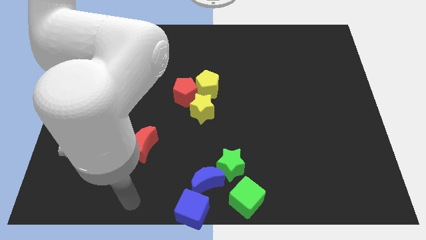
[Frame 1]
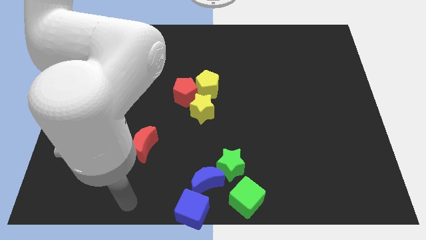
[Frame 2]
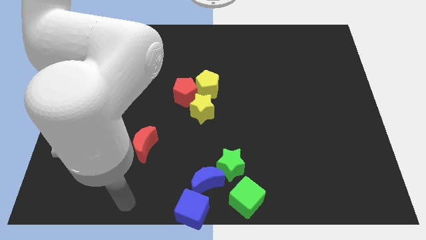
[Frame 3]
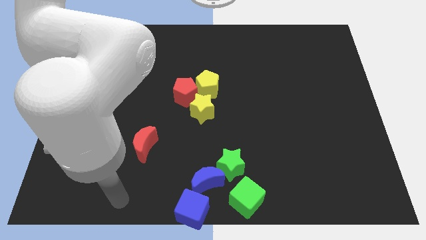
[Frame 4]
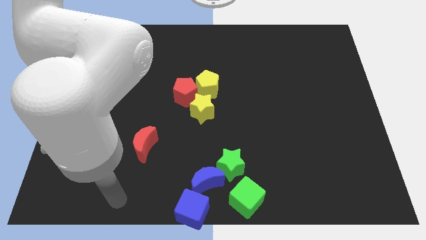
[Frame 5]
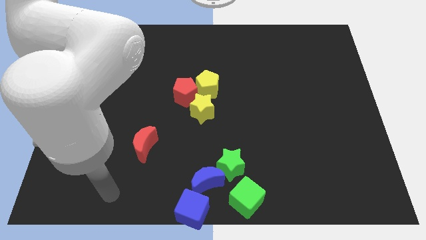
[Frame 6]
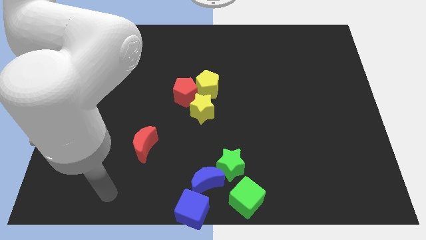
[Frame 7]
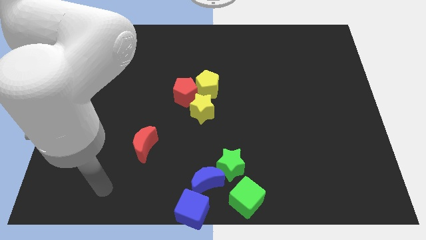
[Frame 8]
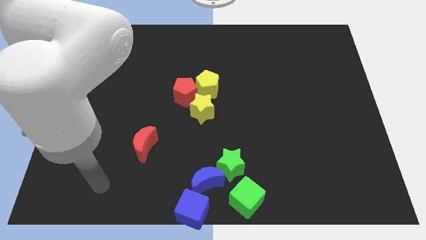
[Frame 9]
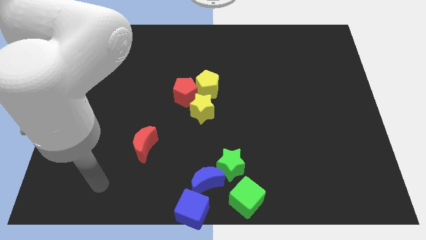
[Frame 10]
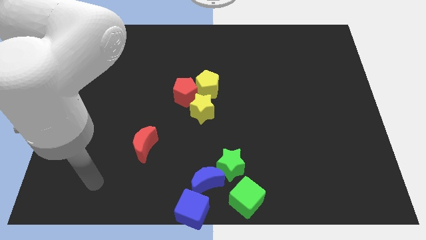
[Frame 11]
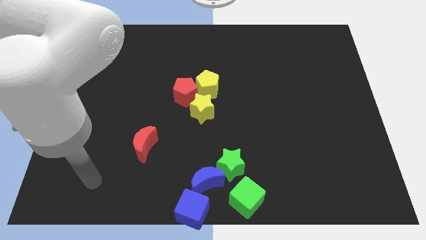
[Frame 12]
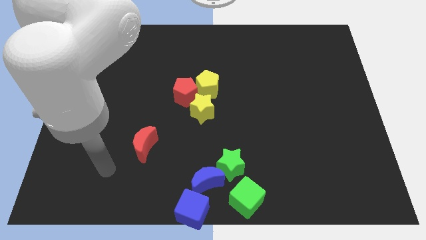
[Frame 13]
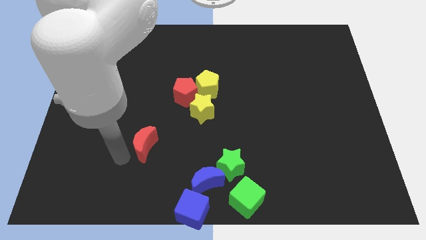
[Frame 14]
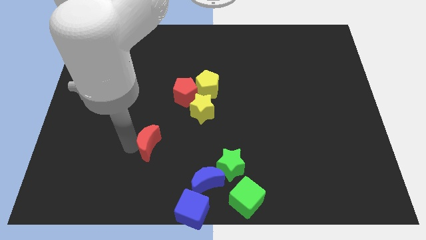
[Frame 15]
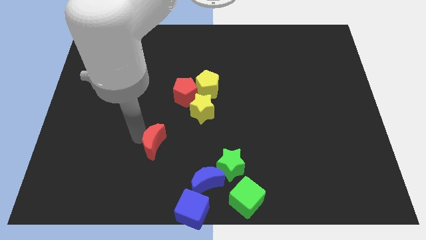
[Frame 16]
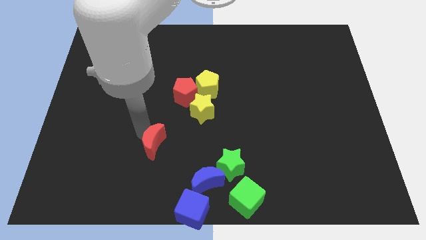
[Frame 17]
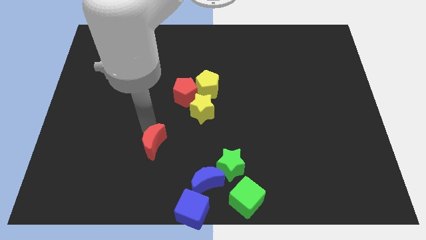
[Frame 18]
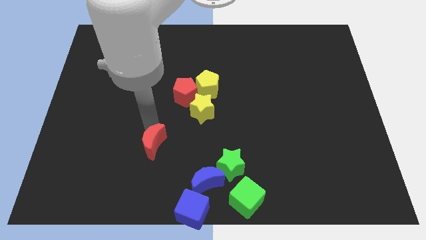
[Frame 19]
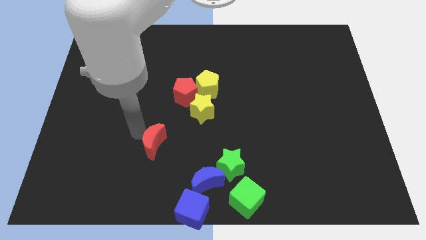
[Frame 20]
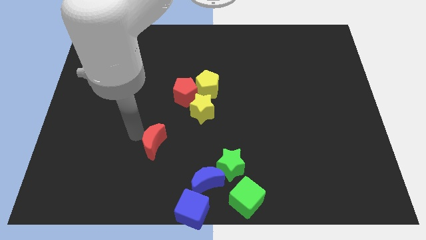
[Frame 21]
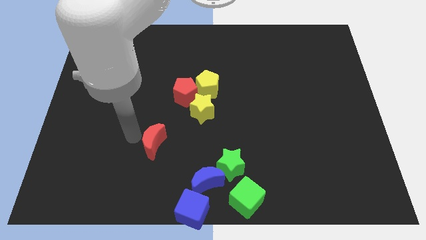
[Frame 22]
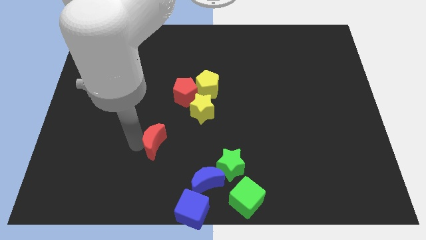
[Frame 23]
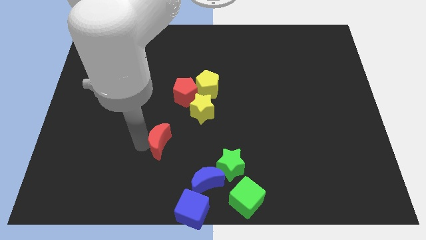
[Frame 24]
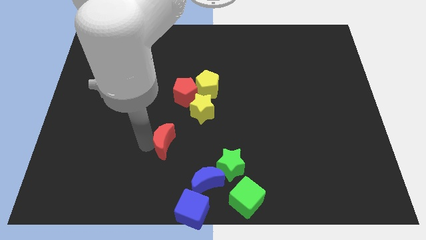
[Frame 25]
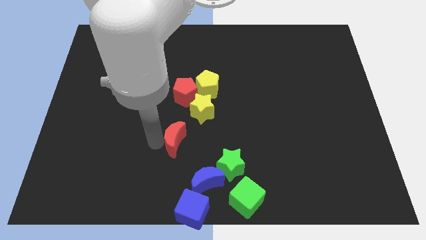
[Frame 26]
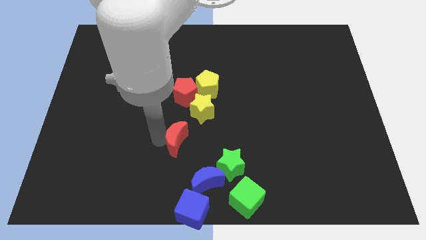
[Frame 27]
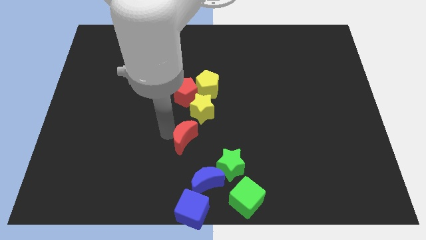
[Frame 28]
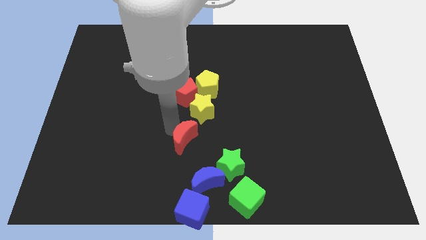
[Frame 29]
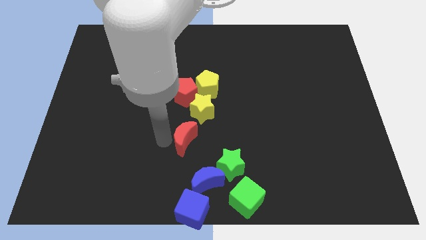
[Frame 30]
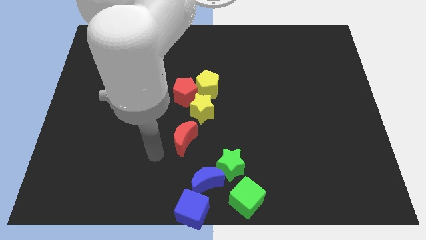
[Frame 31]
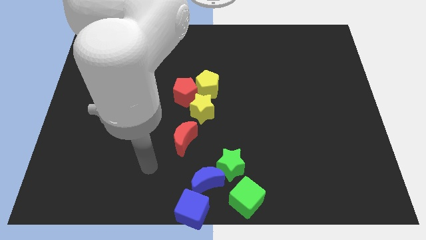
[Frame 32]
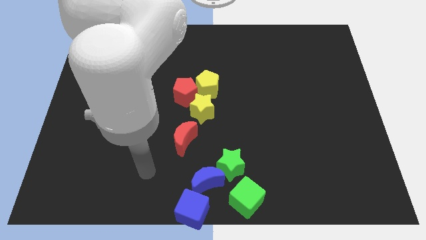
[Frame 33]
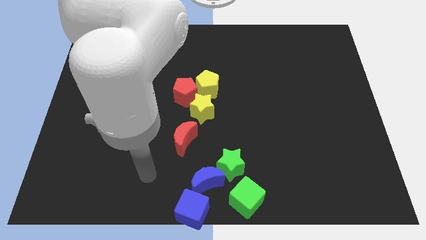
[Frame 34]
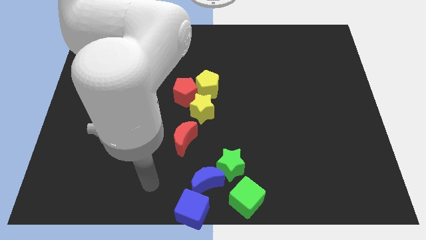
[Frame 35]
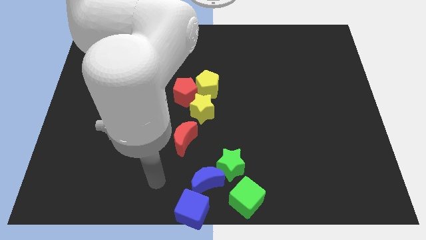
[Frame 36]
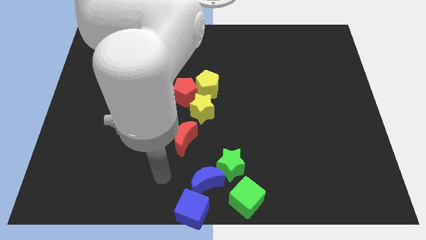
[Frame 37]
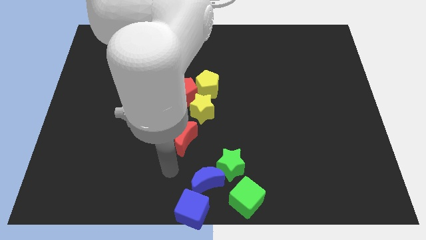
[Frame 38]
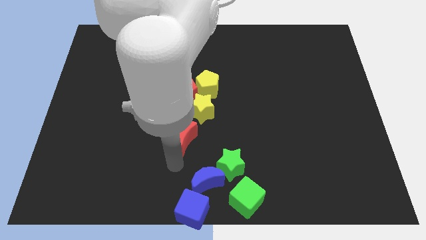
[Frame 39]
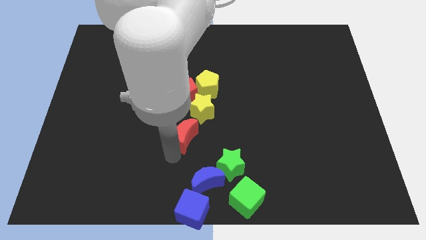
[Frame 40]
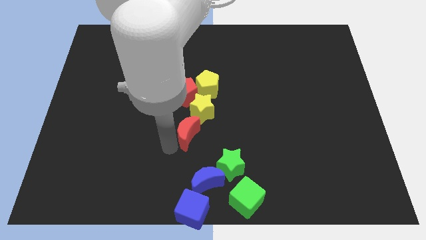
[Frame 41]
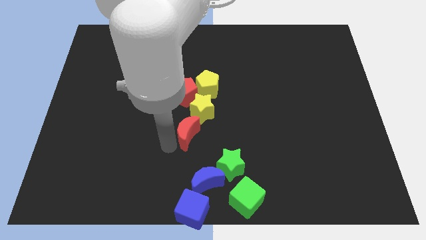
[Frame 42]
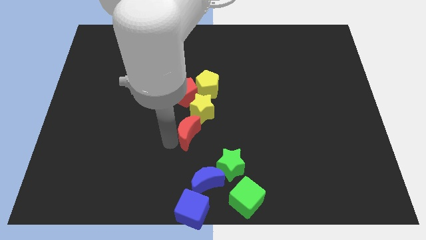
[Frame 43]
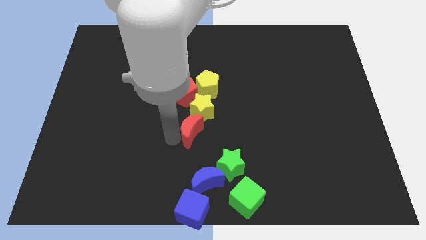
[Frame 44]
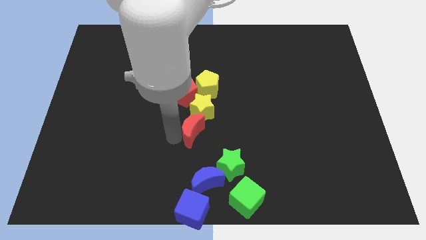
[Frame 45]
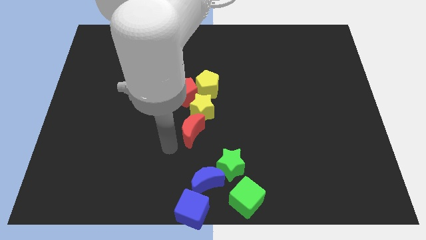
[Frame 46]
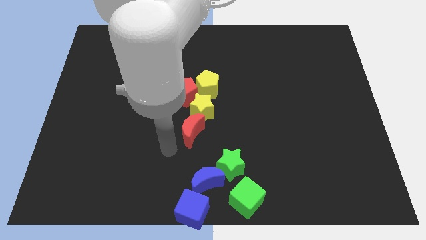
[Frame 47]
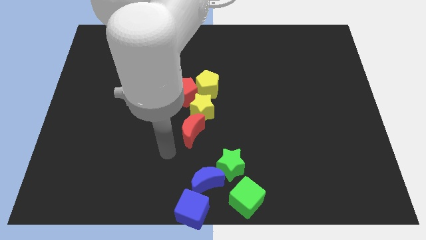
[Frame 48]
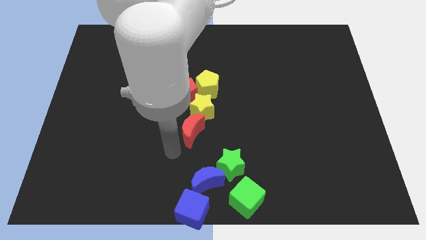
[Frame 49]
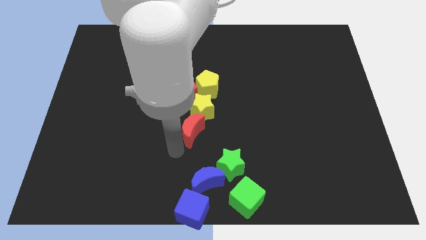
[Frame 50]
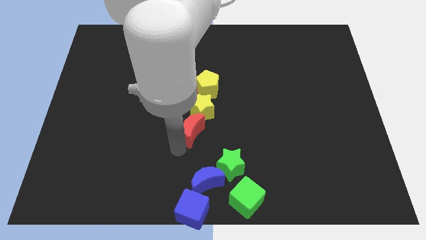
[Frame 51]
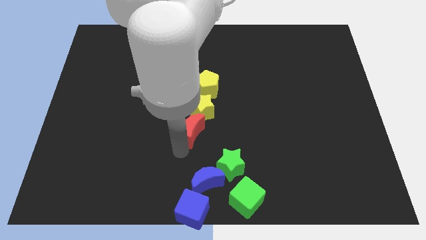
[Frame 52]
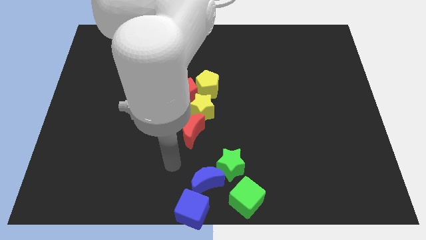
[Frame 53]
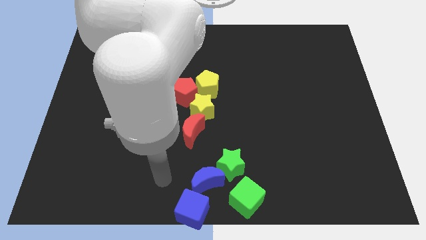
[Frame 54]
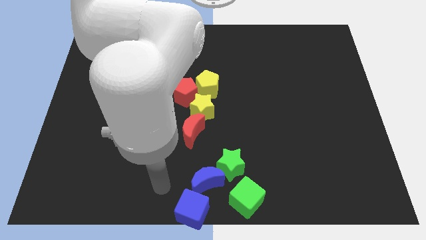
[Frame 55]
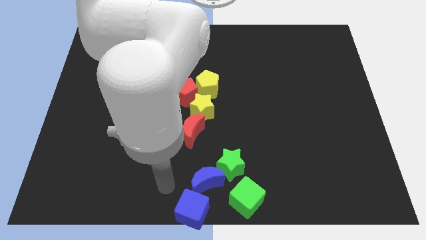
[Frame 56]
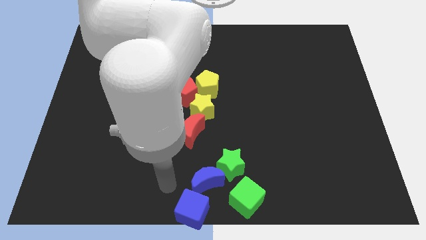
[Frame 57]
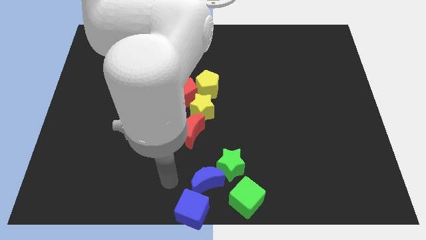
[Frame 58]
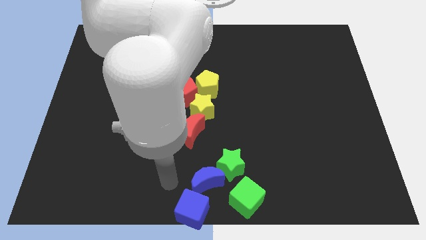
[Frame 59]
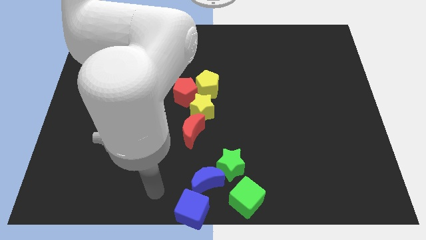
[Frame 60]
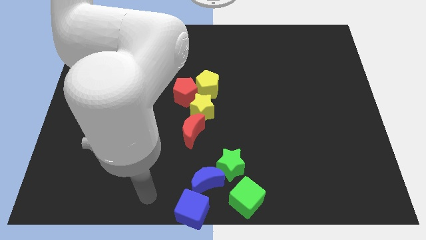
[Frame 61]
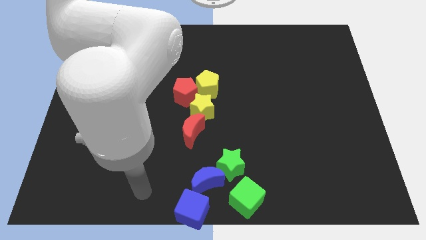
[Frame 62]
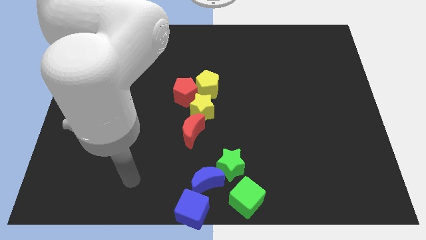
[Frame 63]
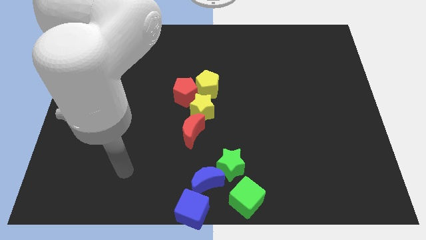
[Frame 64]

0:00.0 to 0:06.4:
push the red crescent below to the yellow star

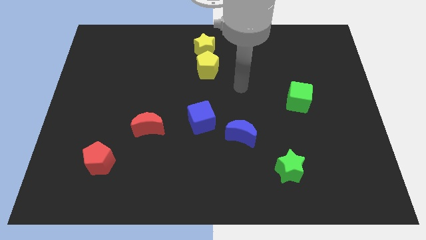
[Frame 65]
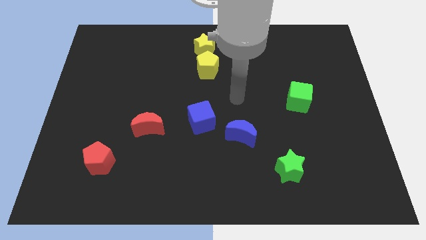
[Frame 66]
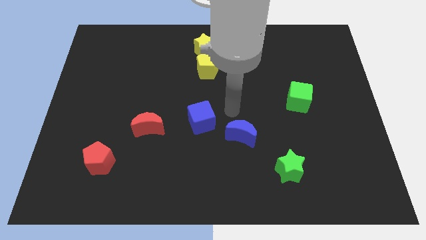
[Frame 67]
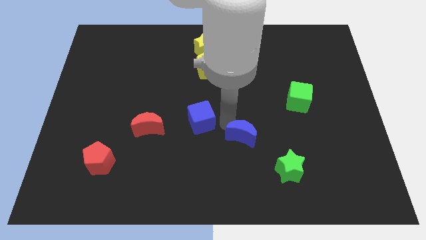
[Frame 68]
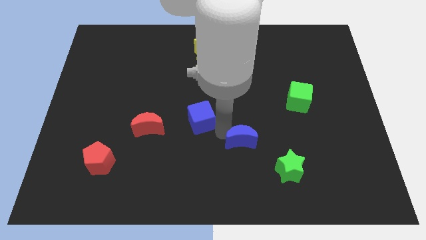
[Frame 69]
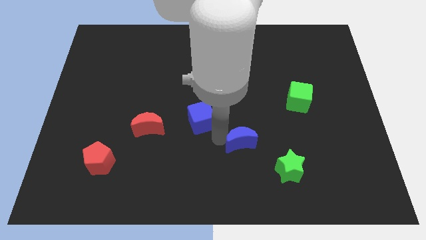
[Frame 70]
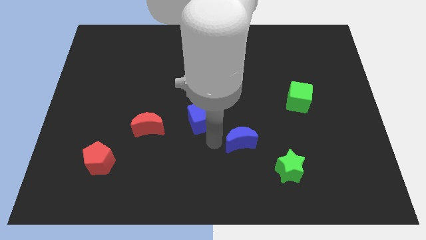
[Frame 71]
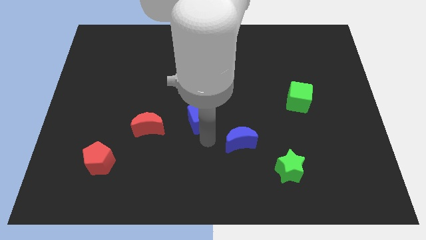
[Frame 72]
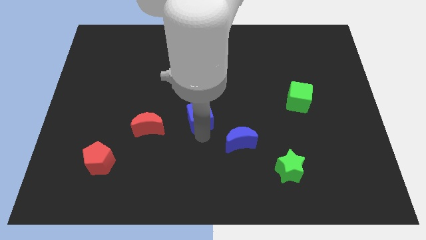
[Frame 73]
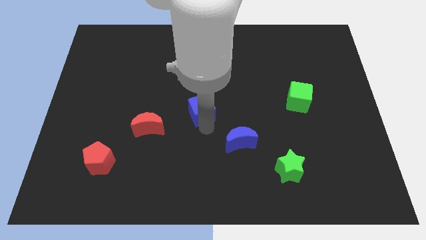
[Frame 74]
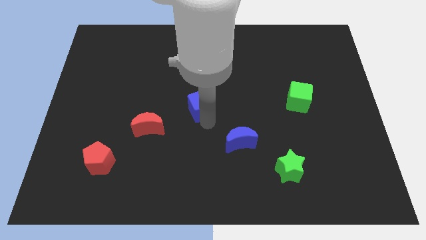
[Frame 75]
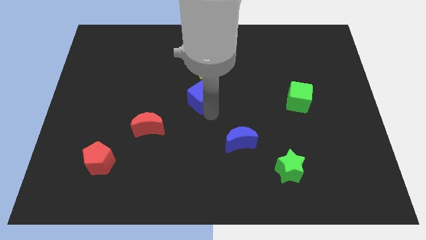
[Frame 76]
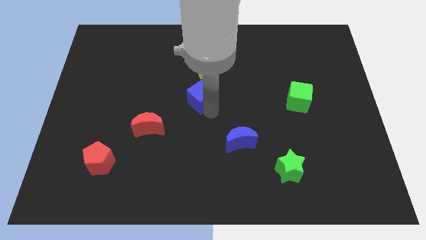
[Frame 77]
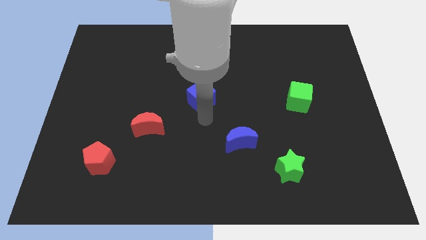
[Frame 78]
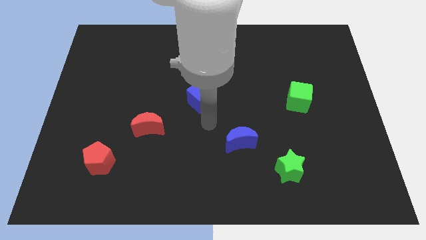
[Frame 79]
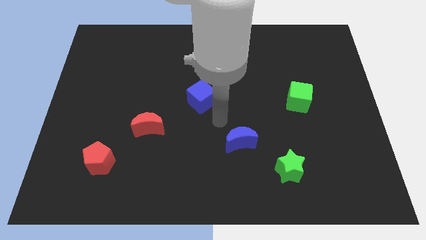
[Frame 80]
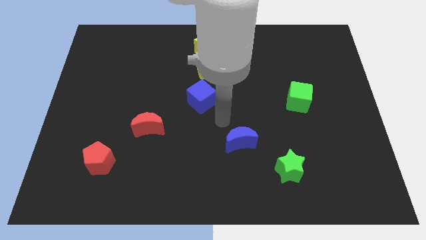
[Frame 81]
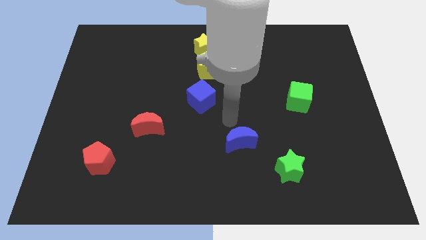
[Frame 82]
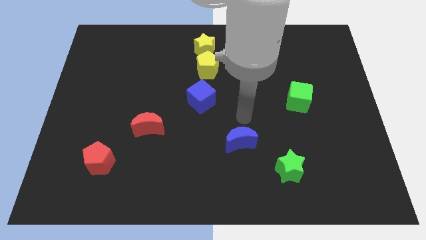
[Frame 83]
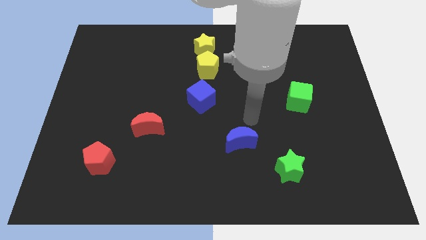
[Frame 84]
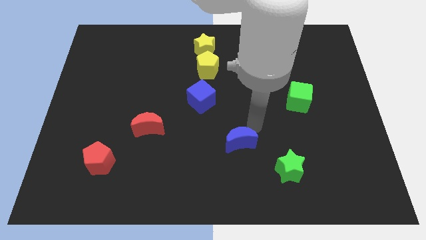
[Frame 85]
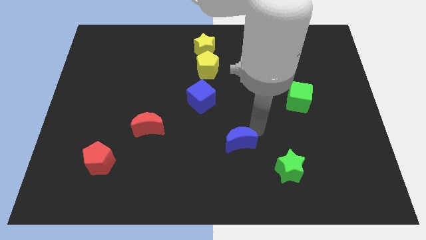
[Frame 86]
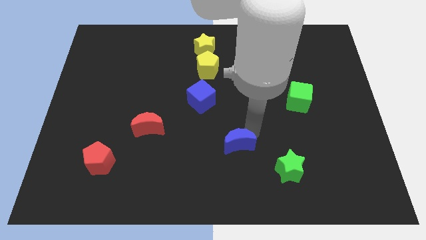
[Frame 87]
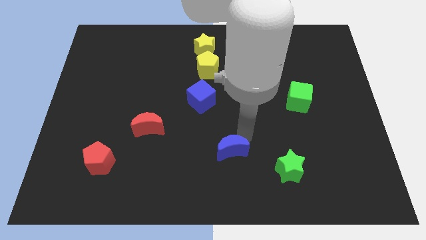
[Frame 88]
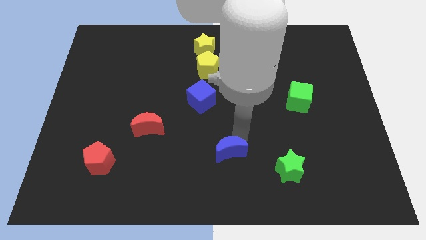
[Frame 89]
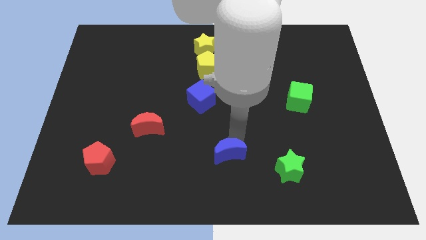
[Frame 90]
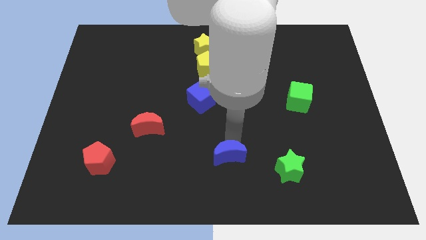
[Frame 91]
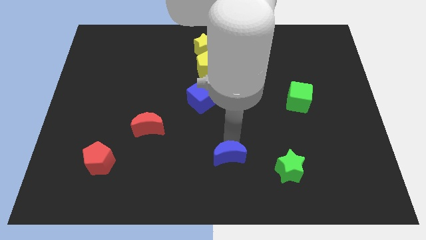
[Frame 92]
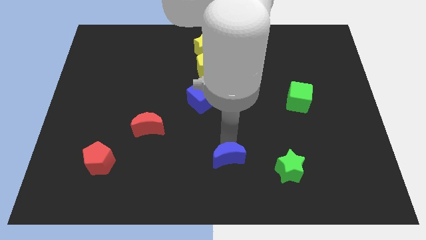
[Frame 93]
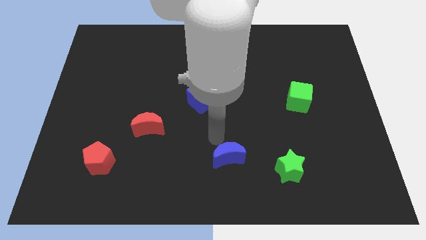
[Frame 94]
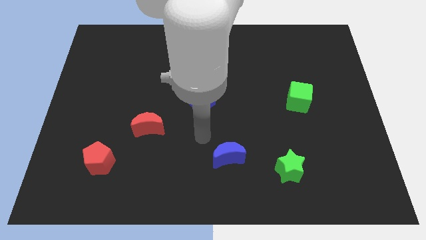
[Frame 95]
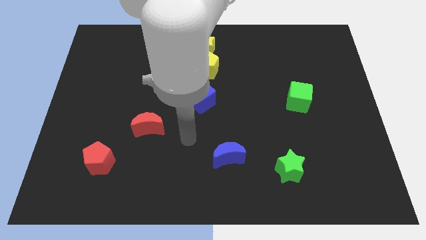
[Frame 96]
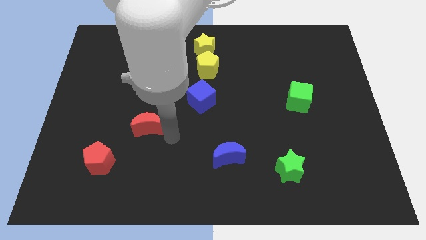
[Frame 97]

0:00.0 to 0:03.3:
slide the blue blocks diagonal to each other
